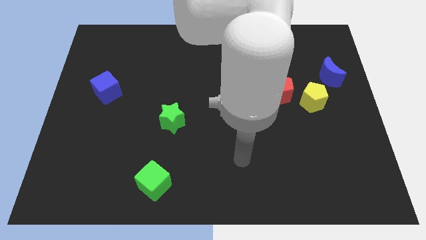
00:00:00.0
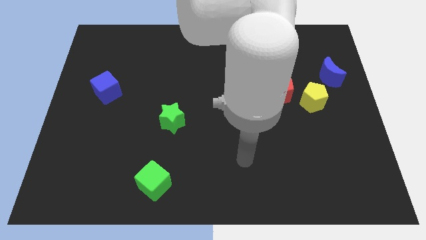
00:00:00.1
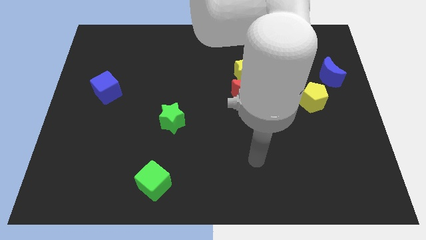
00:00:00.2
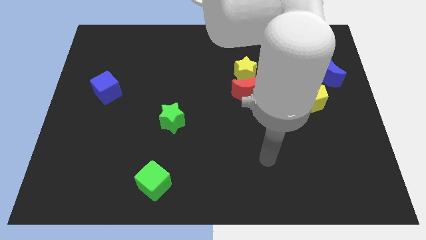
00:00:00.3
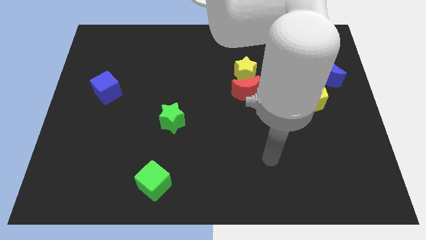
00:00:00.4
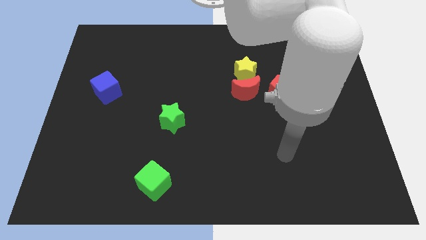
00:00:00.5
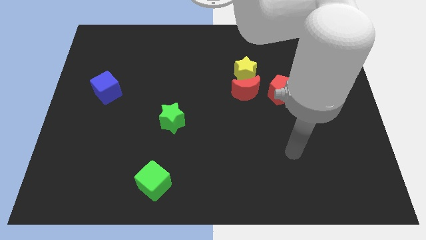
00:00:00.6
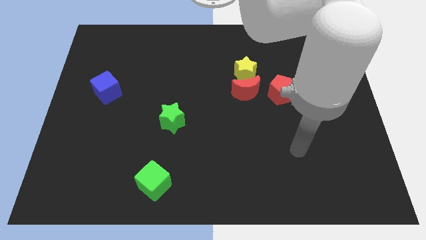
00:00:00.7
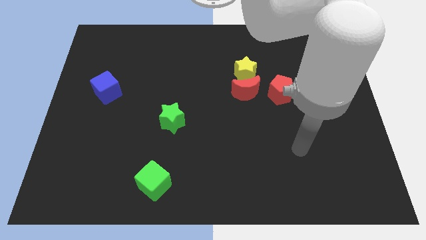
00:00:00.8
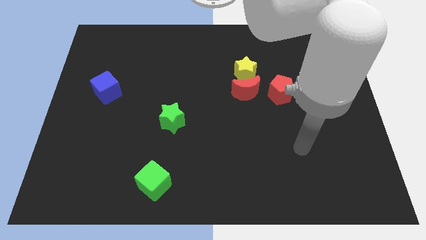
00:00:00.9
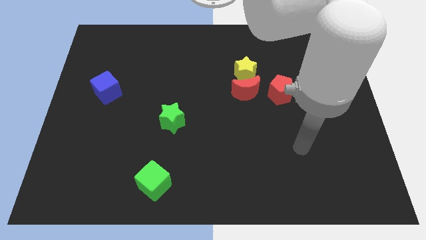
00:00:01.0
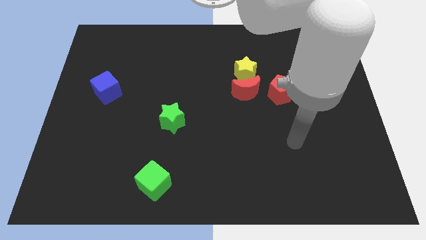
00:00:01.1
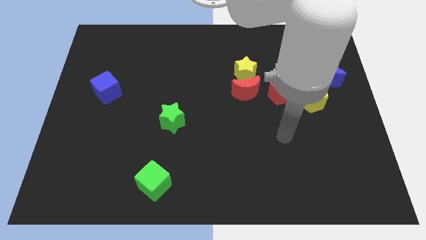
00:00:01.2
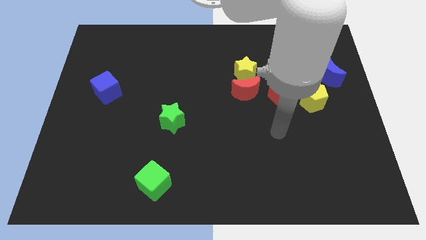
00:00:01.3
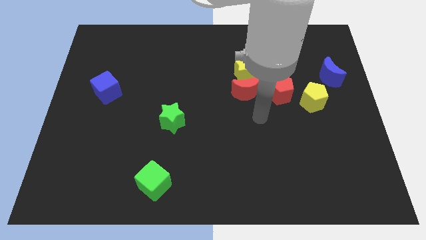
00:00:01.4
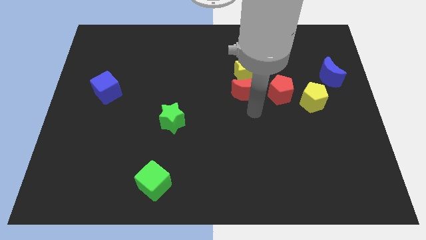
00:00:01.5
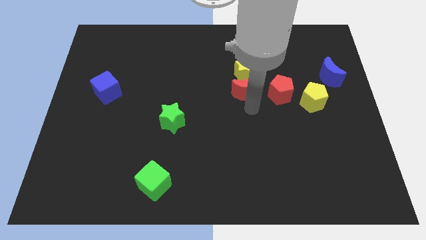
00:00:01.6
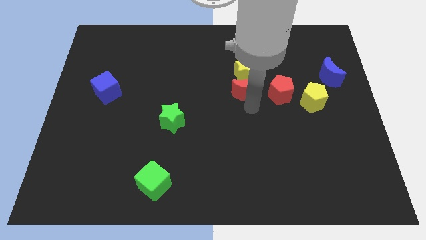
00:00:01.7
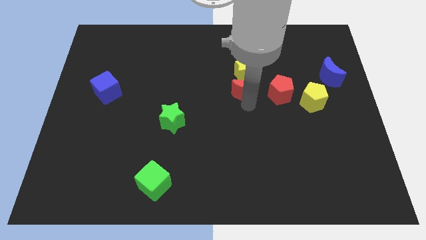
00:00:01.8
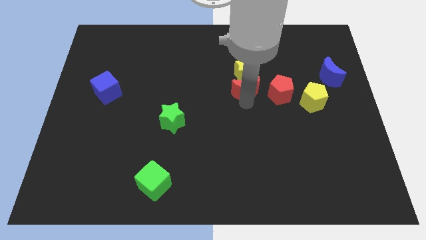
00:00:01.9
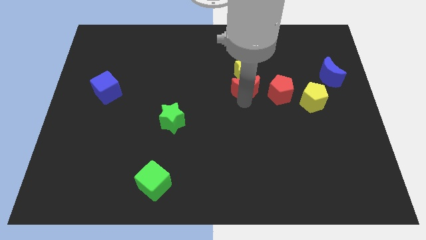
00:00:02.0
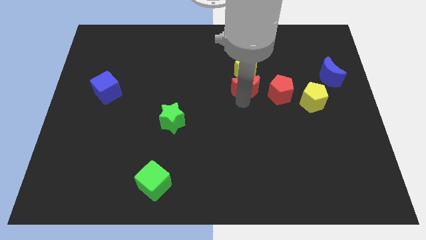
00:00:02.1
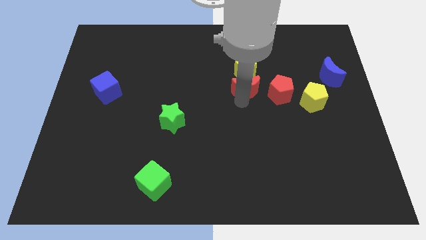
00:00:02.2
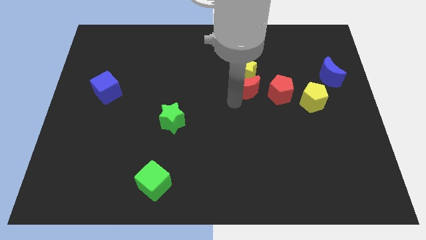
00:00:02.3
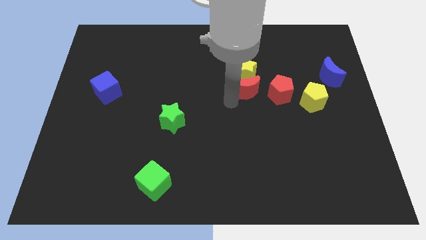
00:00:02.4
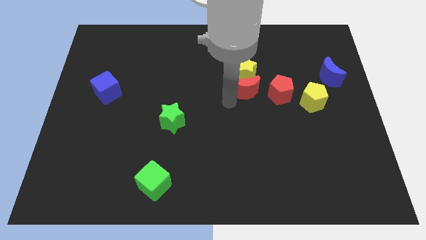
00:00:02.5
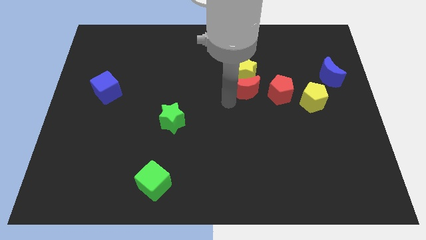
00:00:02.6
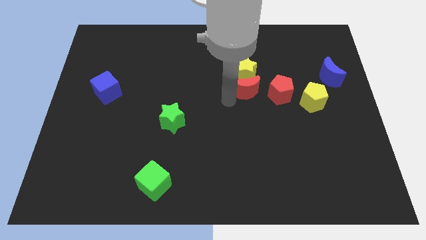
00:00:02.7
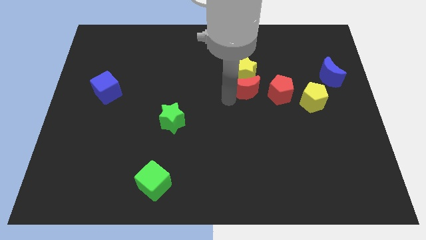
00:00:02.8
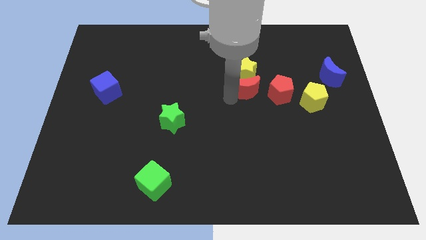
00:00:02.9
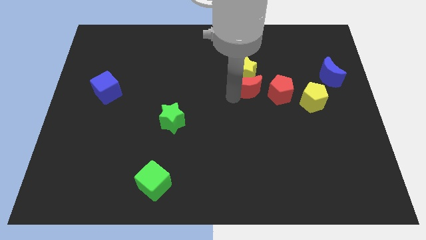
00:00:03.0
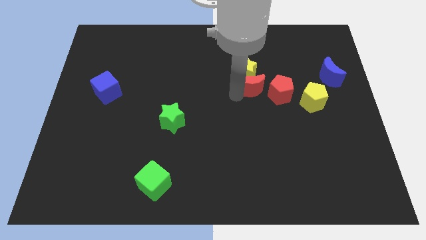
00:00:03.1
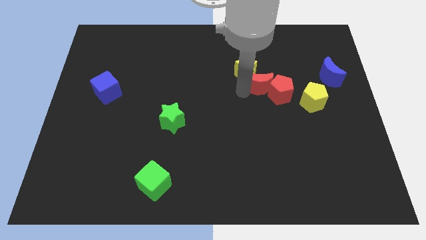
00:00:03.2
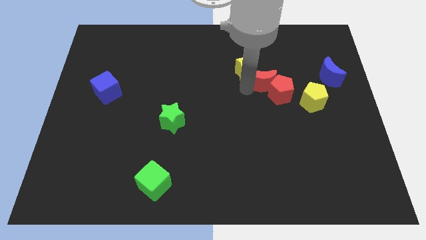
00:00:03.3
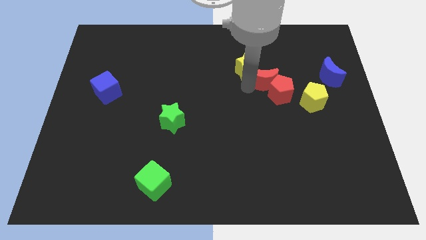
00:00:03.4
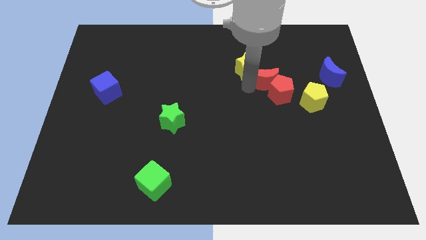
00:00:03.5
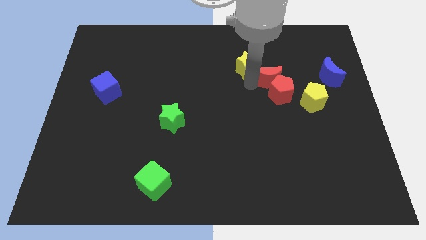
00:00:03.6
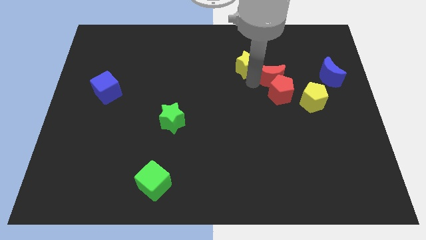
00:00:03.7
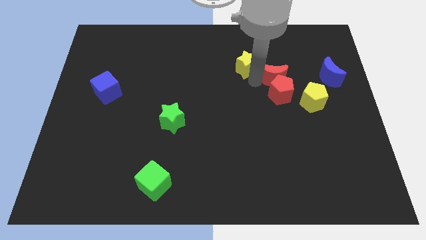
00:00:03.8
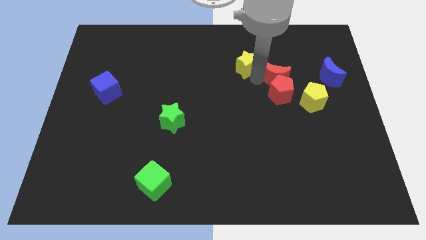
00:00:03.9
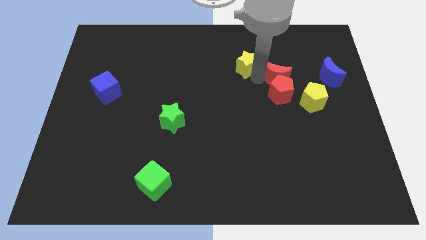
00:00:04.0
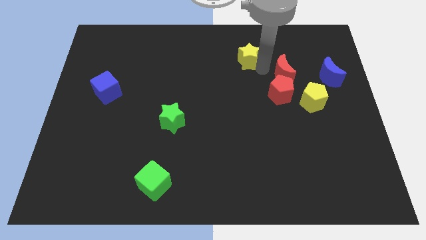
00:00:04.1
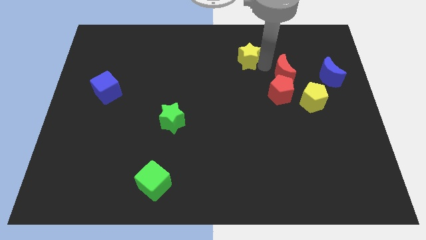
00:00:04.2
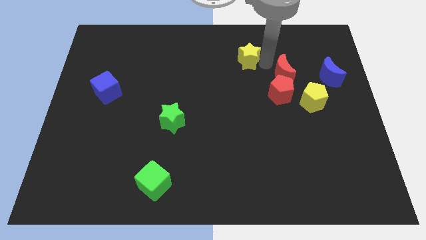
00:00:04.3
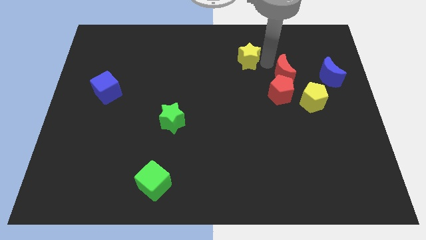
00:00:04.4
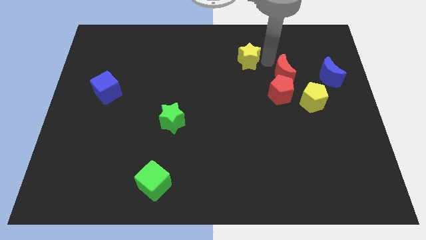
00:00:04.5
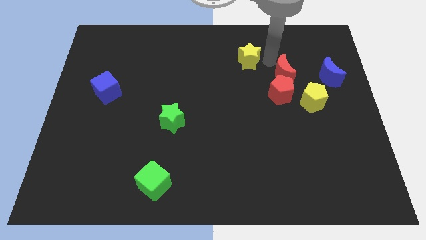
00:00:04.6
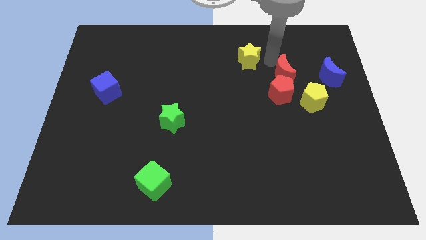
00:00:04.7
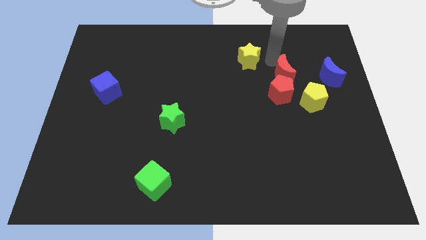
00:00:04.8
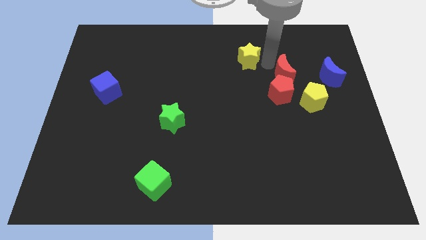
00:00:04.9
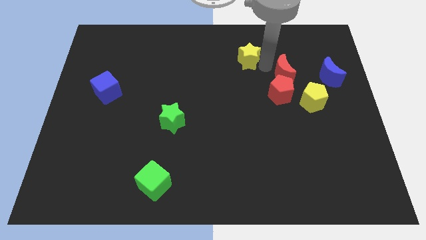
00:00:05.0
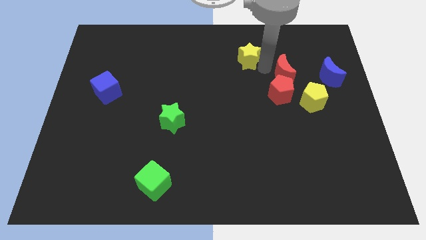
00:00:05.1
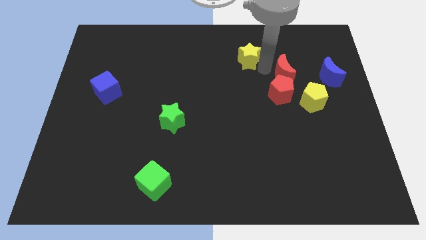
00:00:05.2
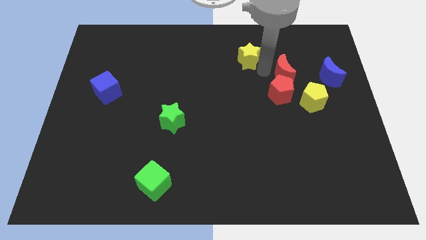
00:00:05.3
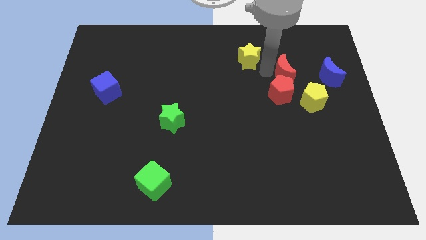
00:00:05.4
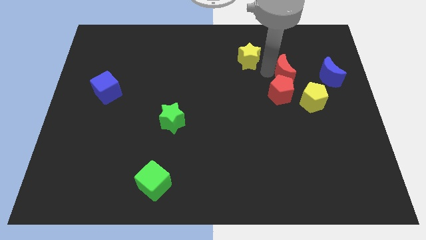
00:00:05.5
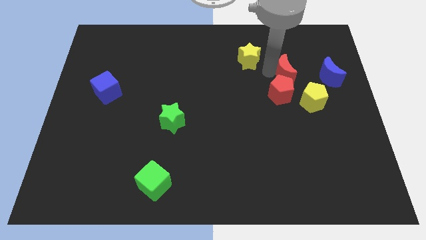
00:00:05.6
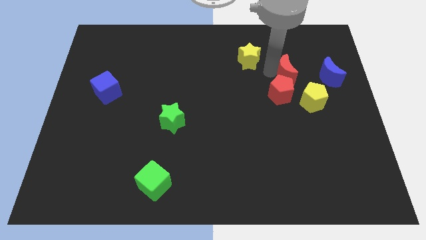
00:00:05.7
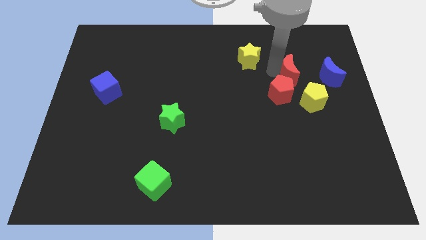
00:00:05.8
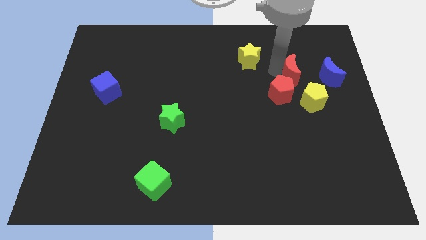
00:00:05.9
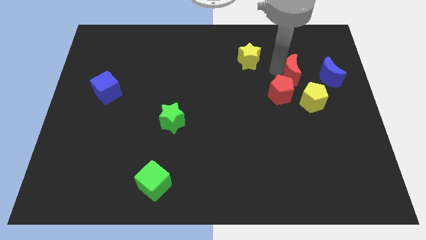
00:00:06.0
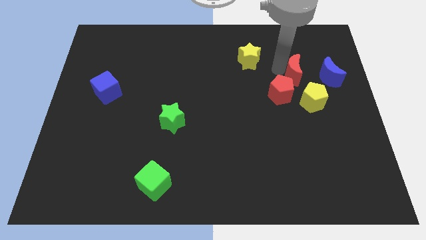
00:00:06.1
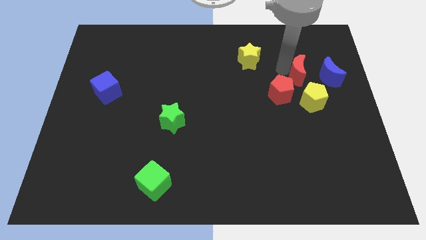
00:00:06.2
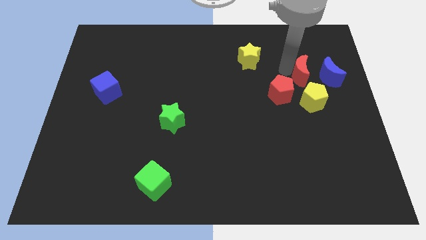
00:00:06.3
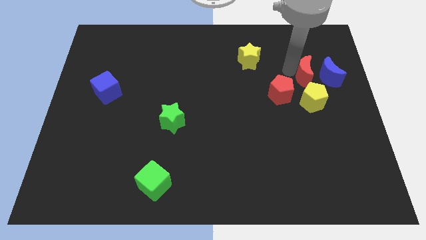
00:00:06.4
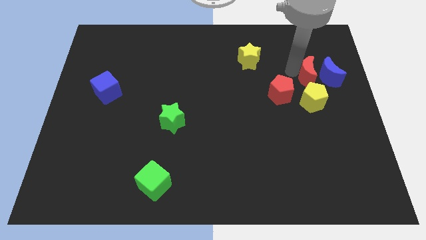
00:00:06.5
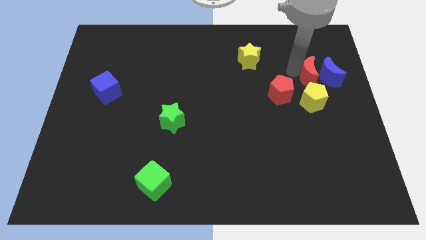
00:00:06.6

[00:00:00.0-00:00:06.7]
push the red moon to the blue moon

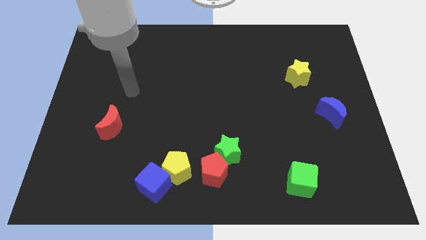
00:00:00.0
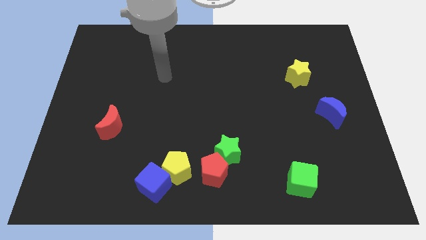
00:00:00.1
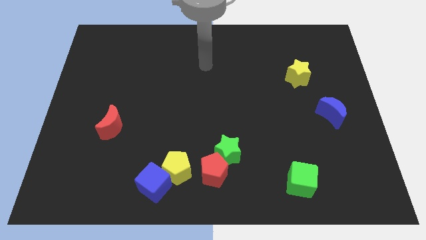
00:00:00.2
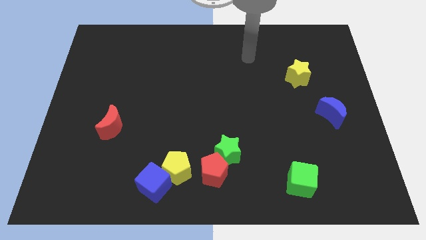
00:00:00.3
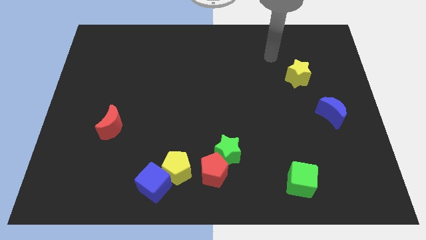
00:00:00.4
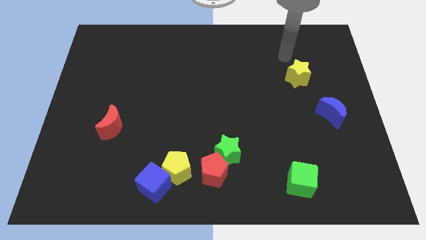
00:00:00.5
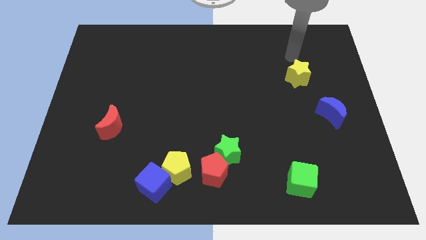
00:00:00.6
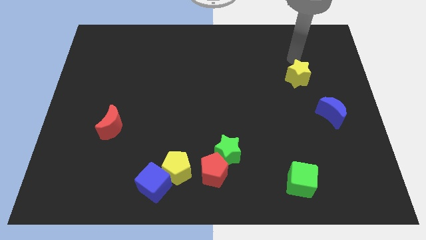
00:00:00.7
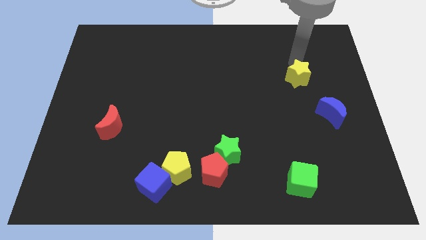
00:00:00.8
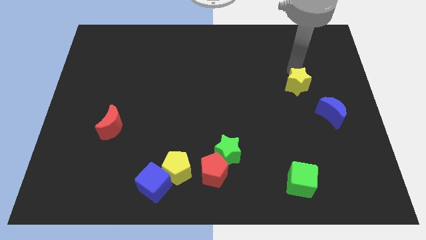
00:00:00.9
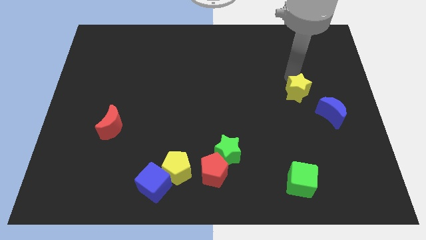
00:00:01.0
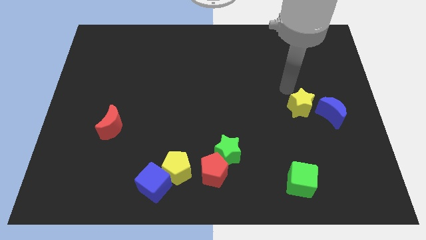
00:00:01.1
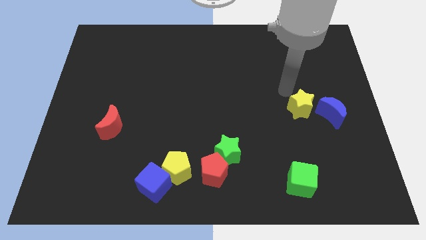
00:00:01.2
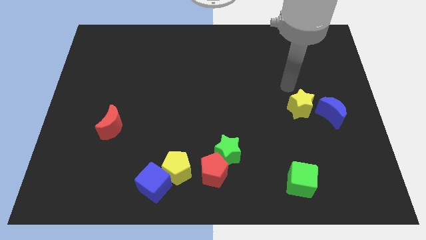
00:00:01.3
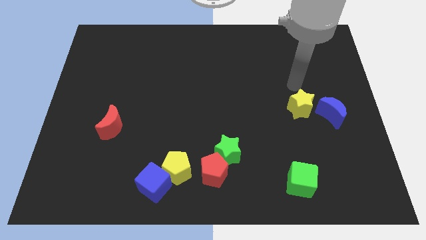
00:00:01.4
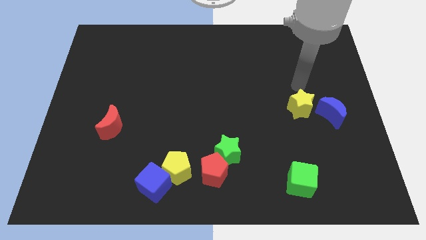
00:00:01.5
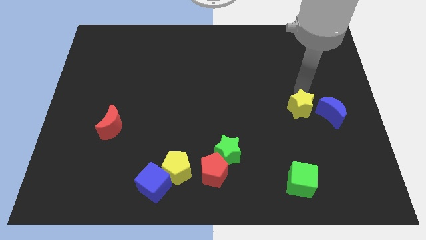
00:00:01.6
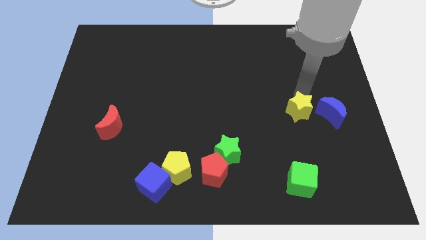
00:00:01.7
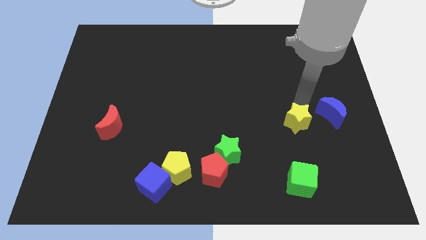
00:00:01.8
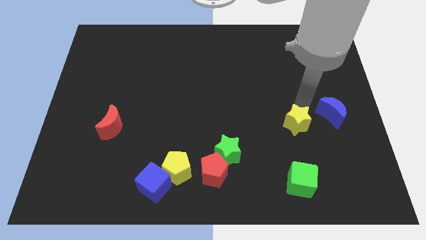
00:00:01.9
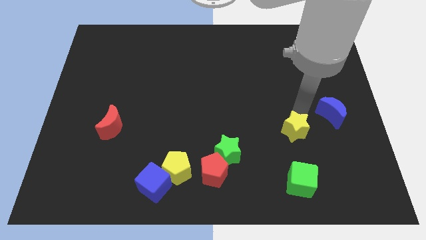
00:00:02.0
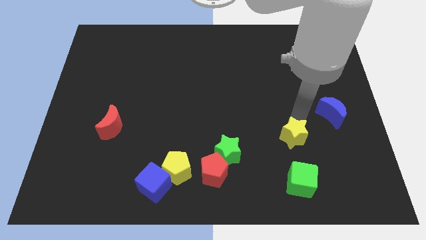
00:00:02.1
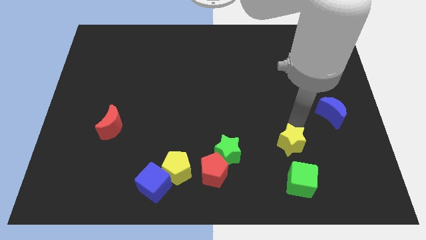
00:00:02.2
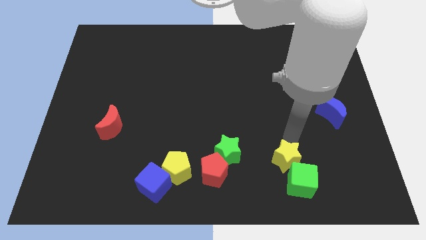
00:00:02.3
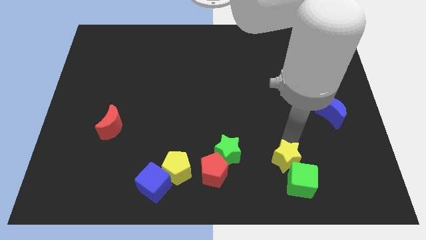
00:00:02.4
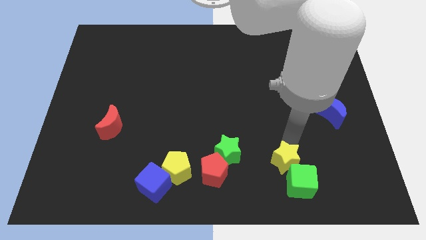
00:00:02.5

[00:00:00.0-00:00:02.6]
move the yellow star close to the green cube
